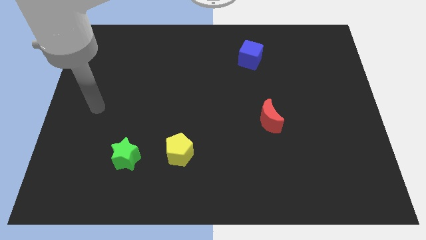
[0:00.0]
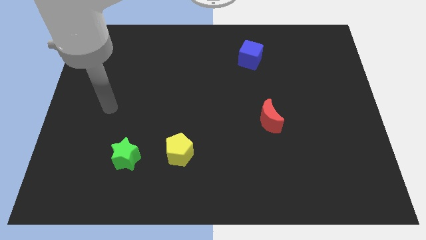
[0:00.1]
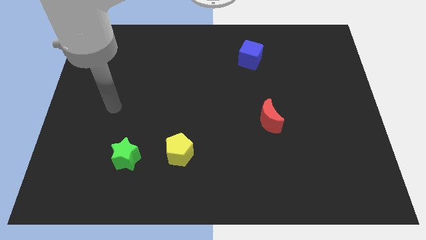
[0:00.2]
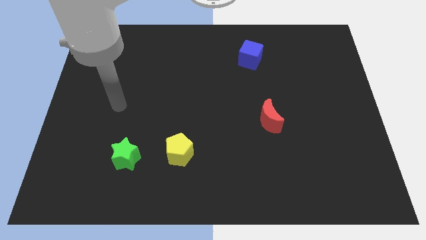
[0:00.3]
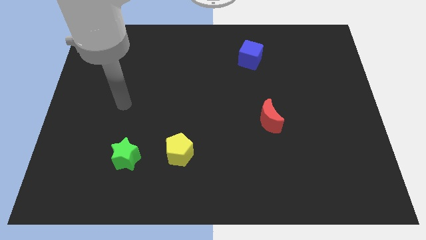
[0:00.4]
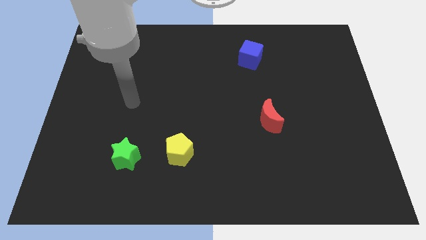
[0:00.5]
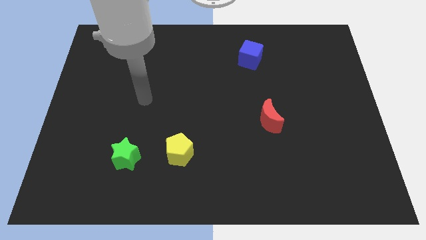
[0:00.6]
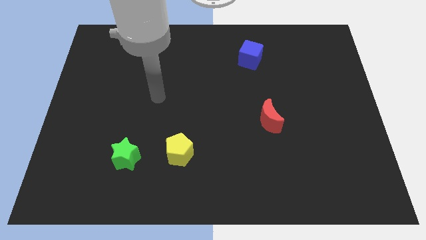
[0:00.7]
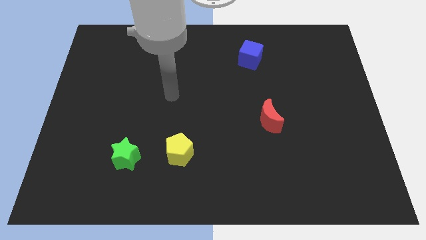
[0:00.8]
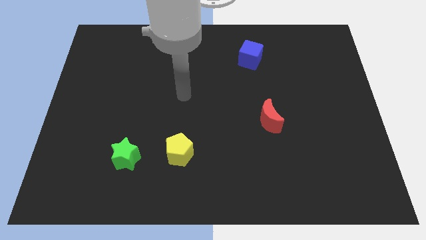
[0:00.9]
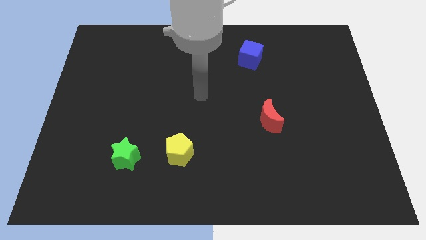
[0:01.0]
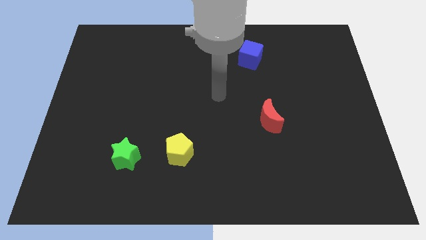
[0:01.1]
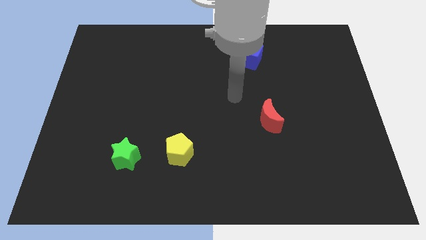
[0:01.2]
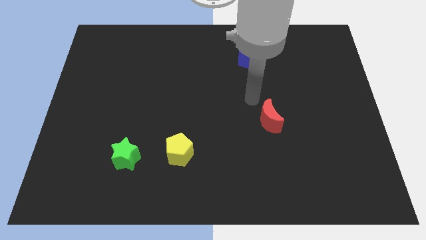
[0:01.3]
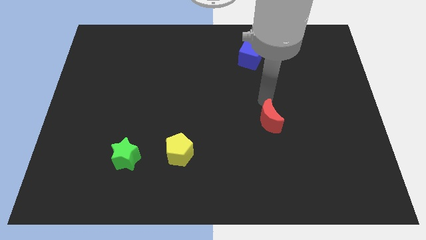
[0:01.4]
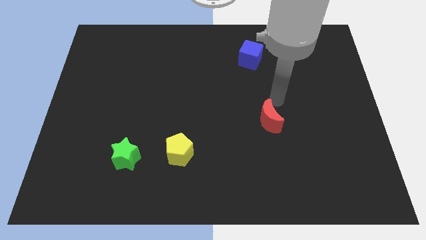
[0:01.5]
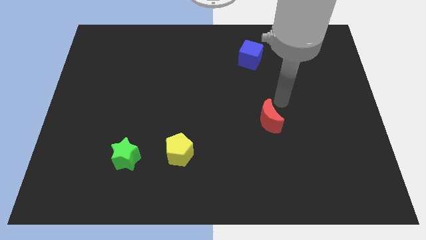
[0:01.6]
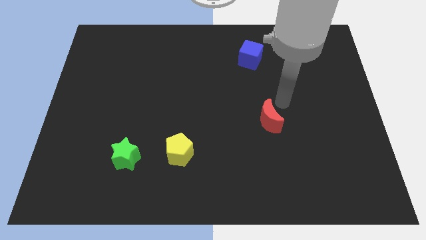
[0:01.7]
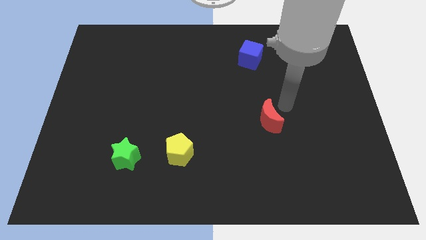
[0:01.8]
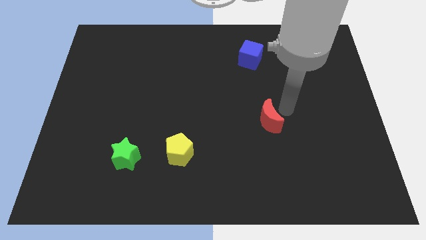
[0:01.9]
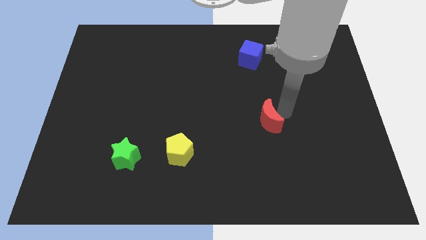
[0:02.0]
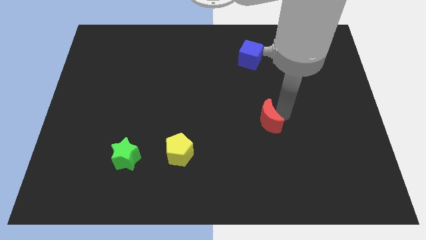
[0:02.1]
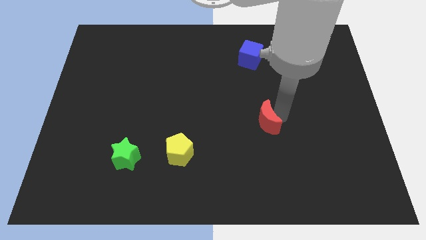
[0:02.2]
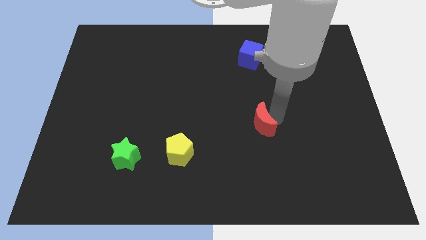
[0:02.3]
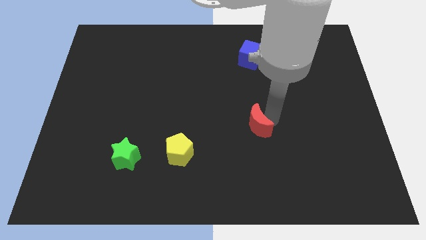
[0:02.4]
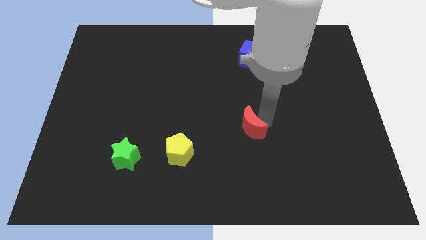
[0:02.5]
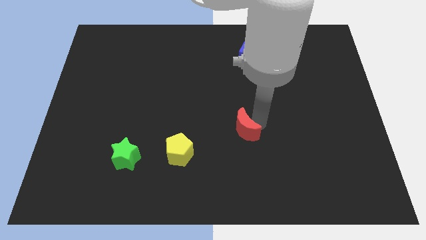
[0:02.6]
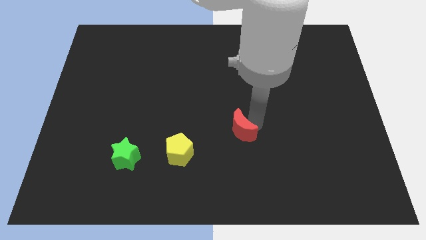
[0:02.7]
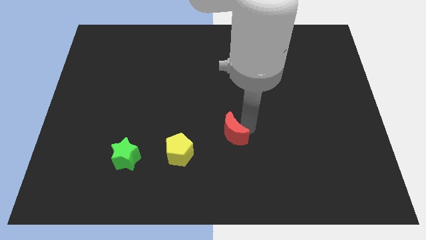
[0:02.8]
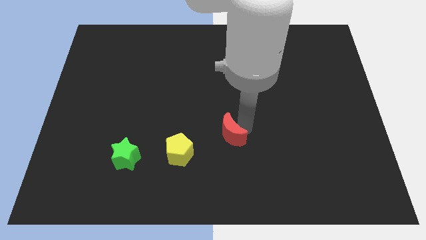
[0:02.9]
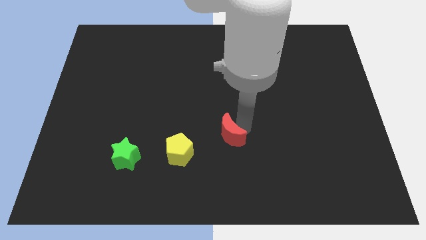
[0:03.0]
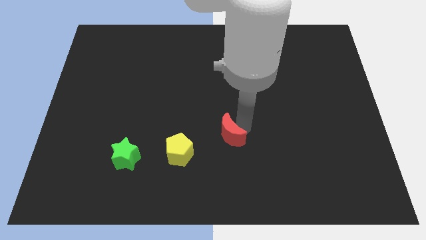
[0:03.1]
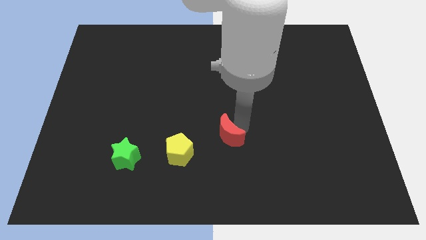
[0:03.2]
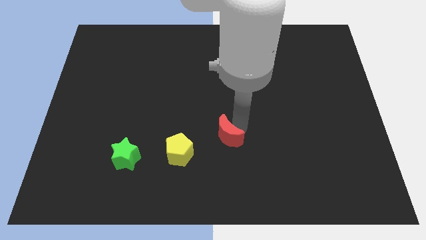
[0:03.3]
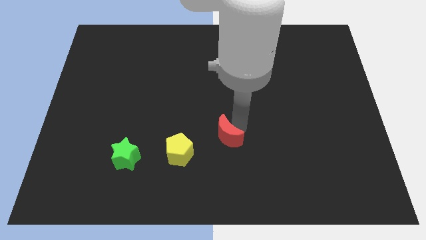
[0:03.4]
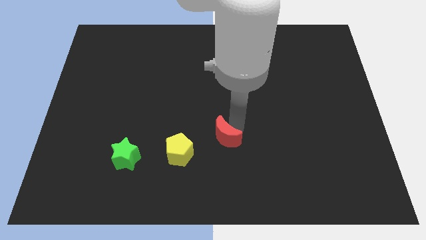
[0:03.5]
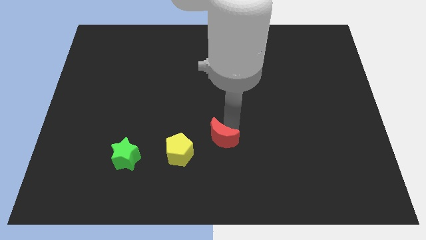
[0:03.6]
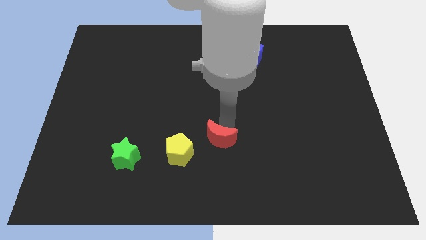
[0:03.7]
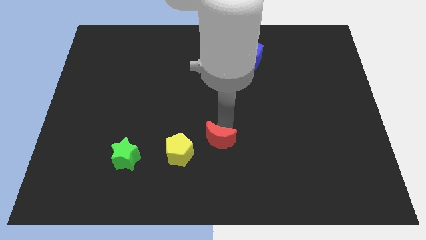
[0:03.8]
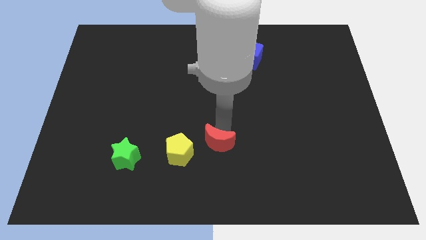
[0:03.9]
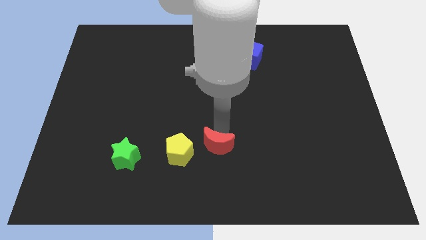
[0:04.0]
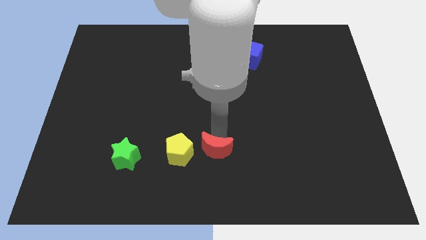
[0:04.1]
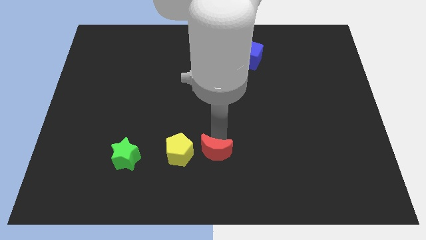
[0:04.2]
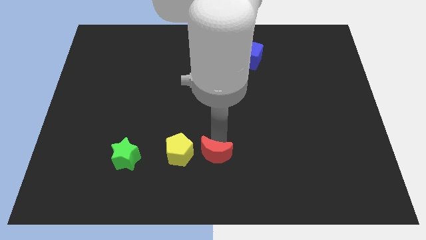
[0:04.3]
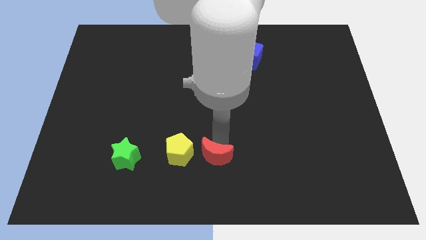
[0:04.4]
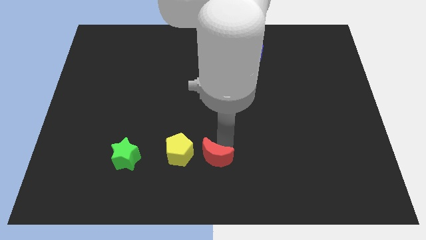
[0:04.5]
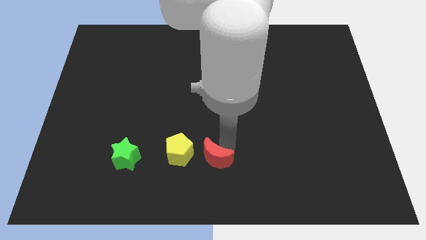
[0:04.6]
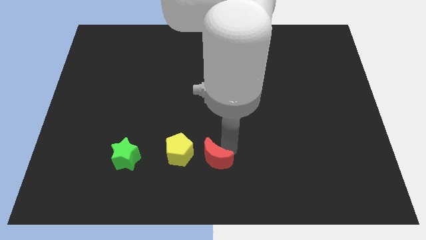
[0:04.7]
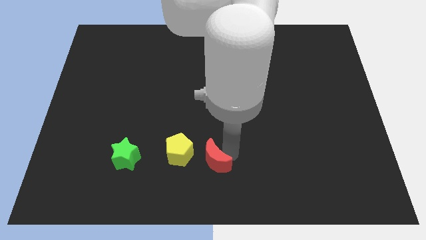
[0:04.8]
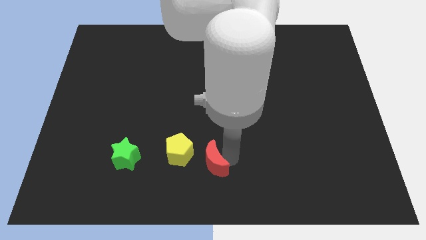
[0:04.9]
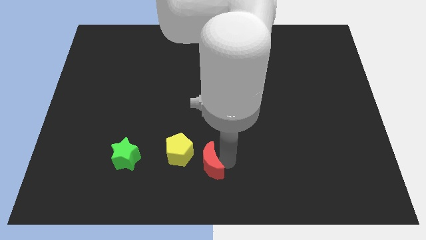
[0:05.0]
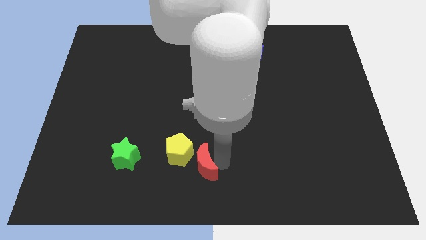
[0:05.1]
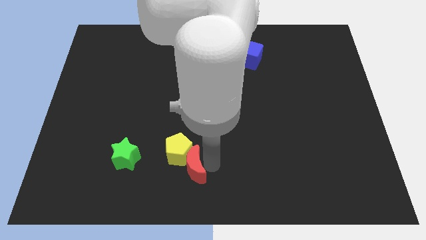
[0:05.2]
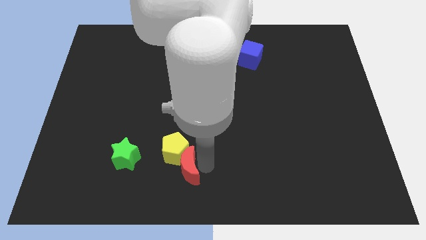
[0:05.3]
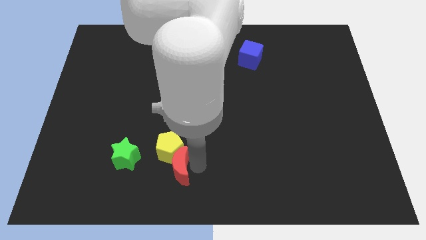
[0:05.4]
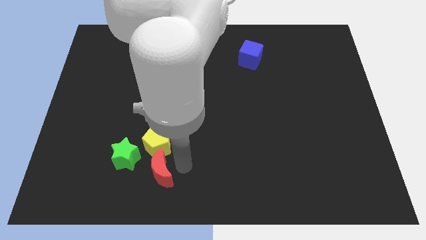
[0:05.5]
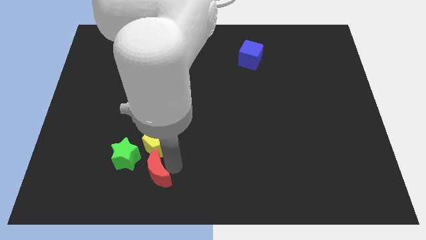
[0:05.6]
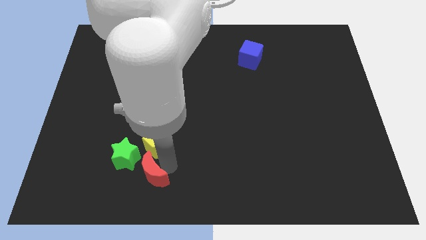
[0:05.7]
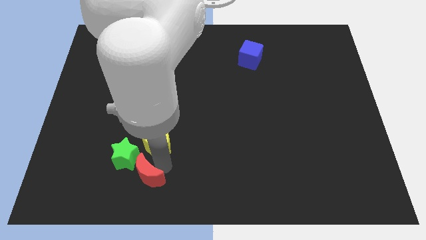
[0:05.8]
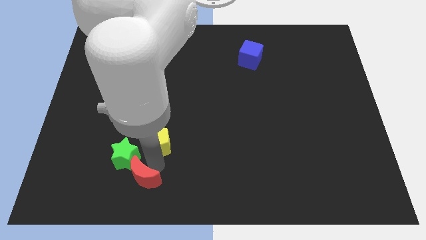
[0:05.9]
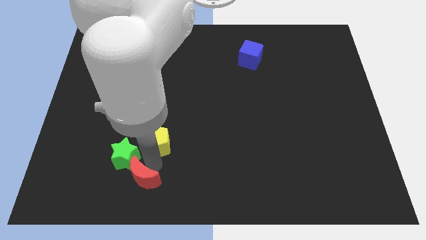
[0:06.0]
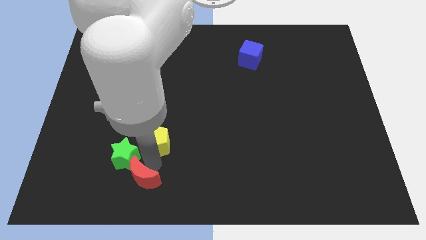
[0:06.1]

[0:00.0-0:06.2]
slide the moon towards the green block

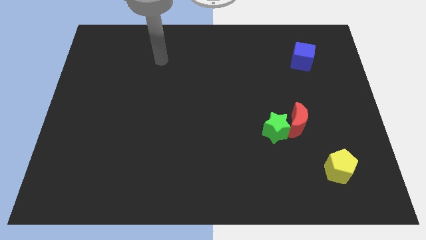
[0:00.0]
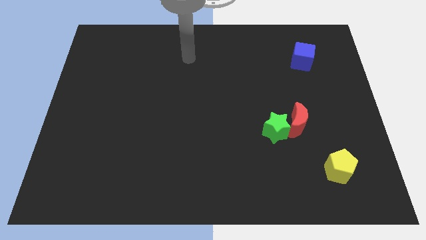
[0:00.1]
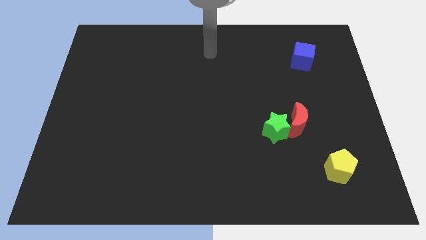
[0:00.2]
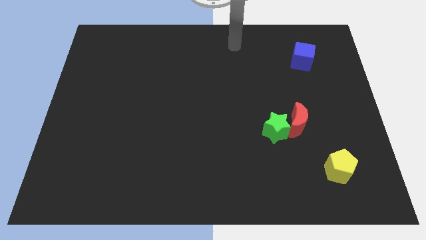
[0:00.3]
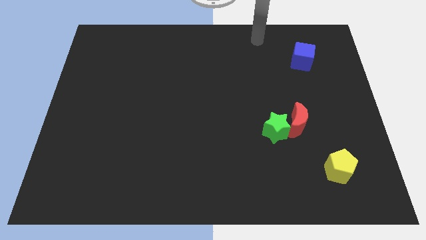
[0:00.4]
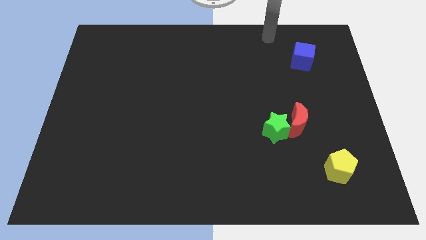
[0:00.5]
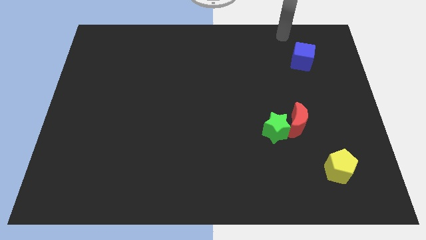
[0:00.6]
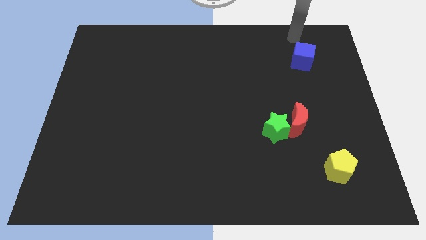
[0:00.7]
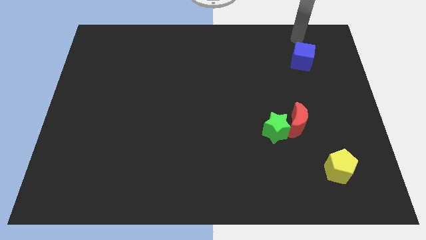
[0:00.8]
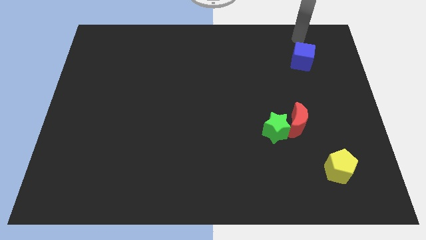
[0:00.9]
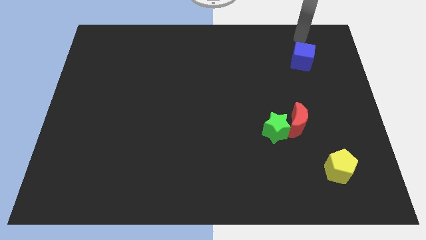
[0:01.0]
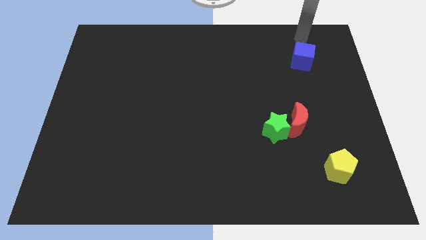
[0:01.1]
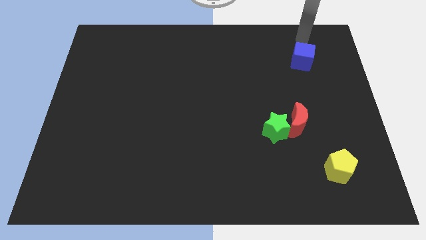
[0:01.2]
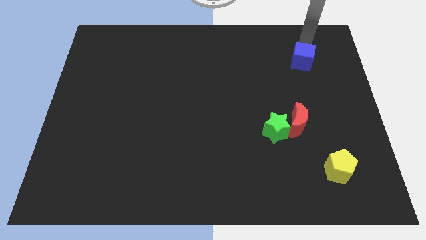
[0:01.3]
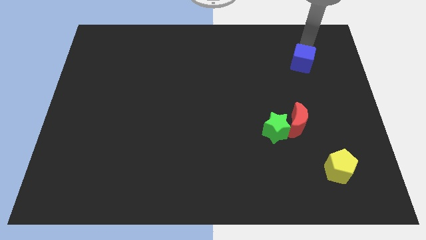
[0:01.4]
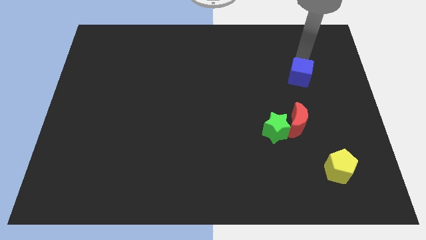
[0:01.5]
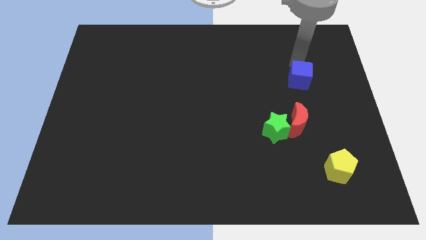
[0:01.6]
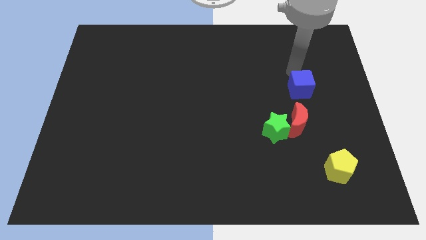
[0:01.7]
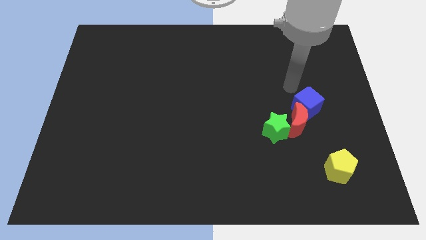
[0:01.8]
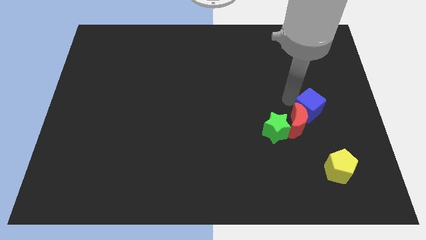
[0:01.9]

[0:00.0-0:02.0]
put the blue block close to the moon

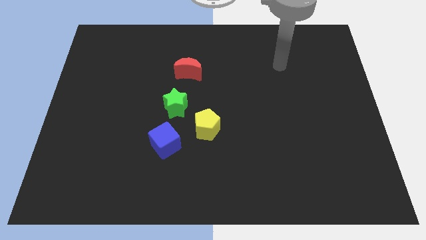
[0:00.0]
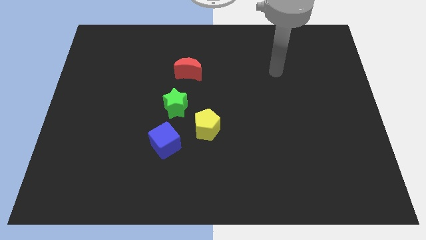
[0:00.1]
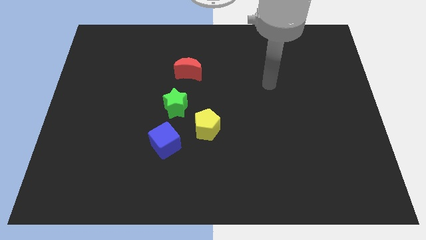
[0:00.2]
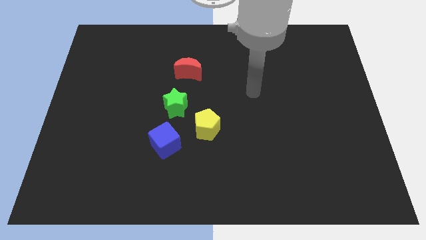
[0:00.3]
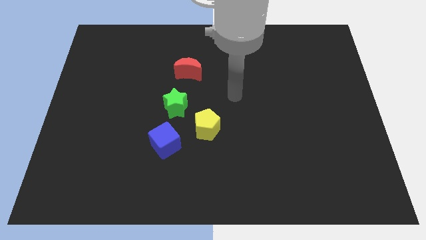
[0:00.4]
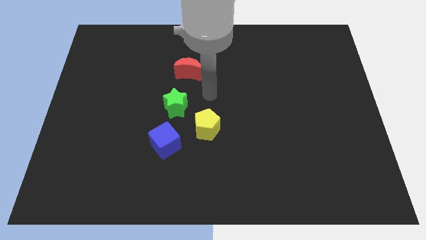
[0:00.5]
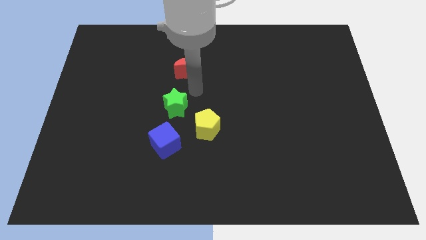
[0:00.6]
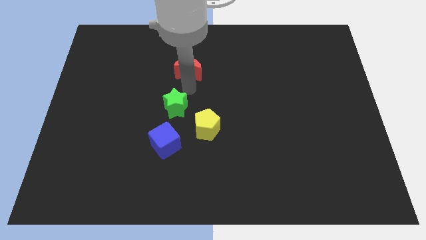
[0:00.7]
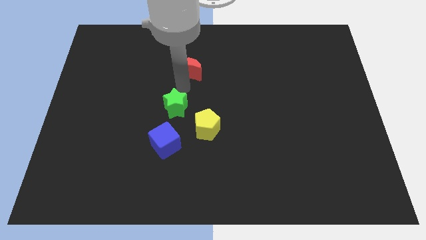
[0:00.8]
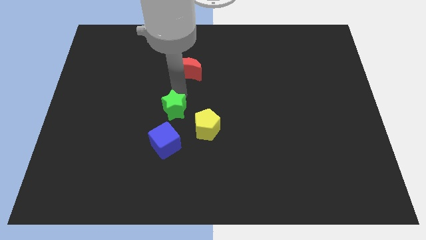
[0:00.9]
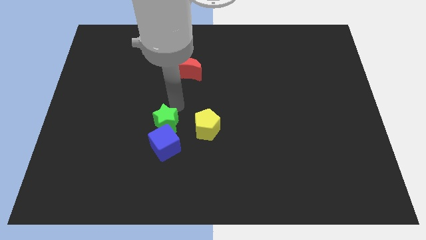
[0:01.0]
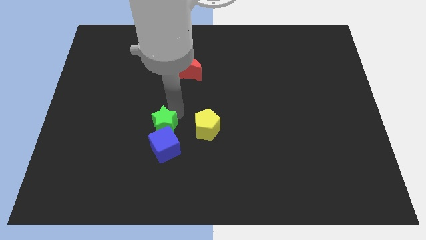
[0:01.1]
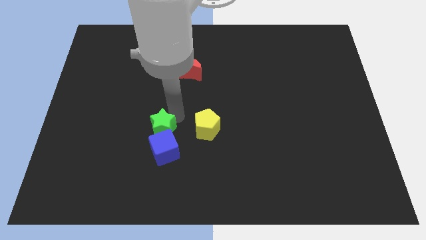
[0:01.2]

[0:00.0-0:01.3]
slide the green star to the cube
